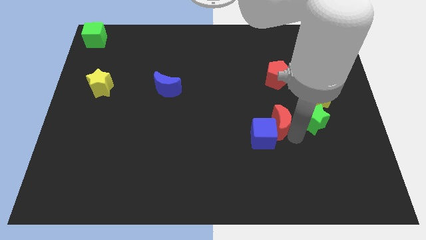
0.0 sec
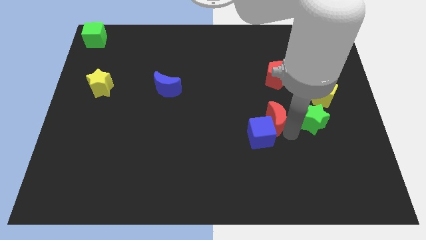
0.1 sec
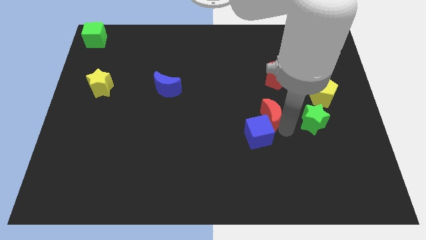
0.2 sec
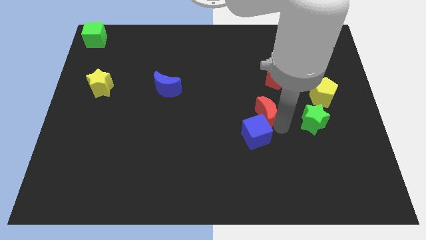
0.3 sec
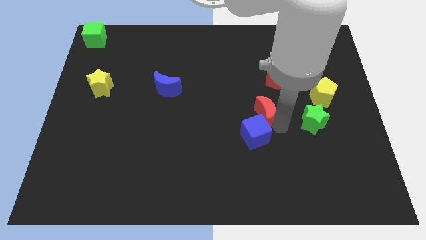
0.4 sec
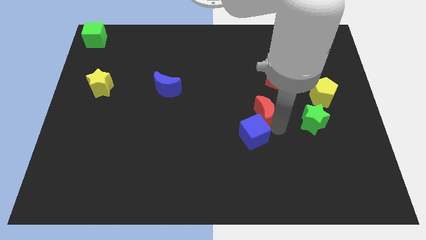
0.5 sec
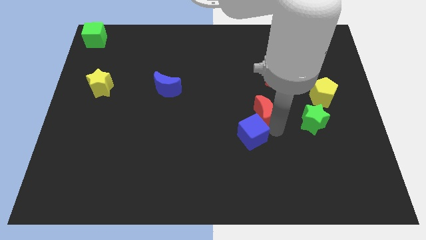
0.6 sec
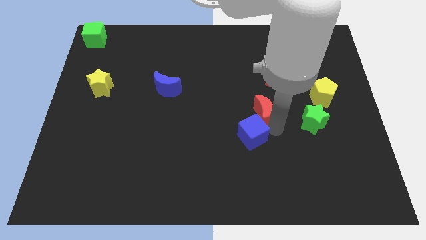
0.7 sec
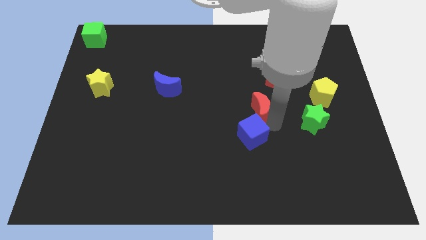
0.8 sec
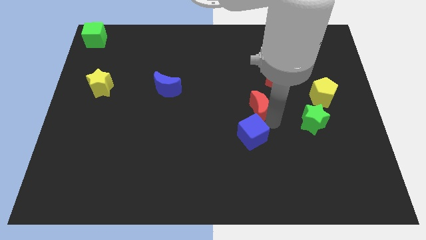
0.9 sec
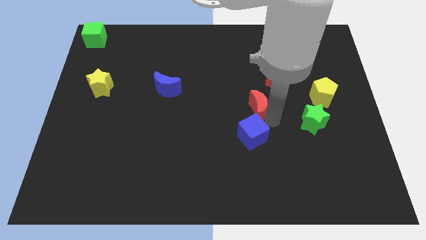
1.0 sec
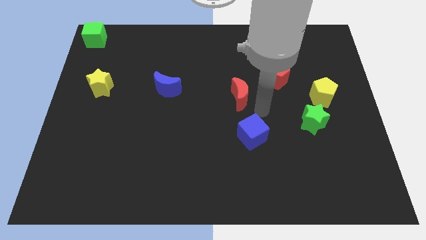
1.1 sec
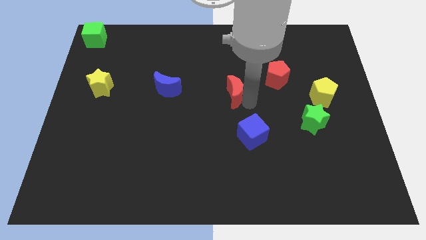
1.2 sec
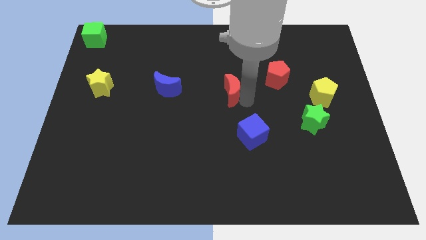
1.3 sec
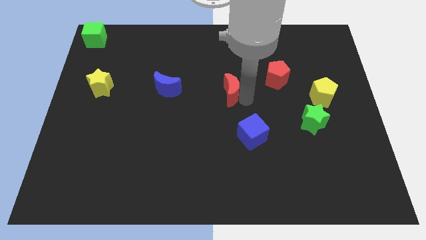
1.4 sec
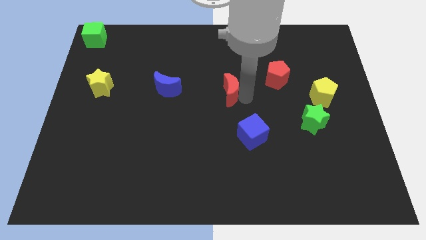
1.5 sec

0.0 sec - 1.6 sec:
move the red crescent away from the blue cube

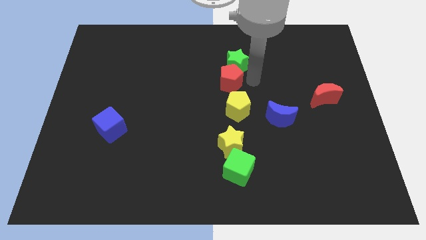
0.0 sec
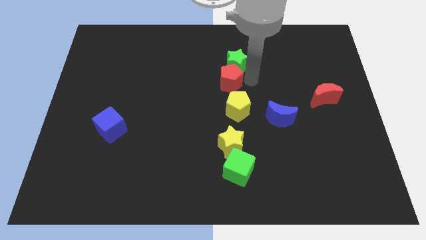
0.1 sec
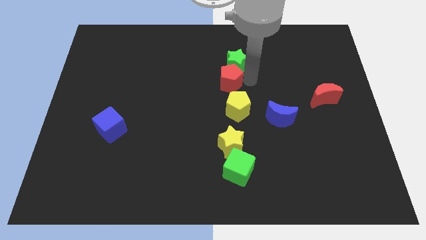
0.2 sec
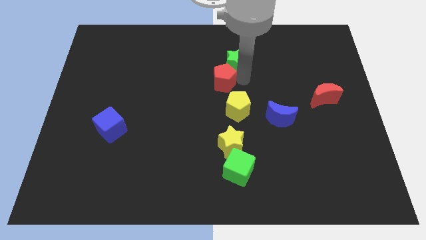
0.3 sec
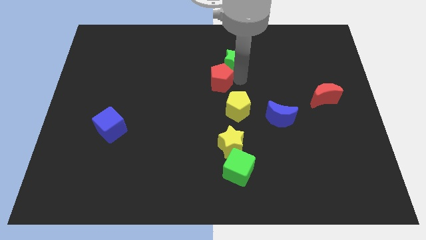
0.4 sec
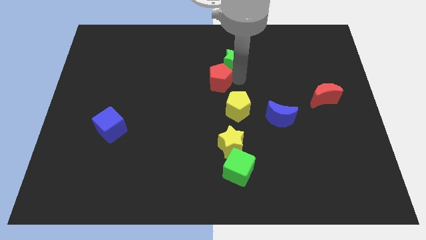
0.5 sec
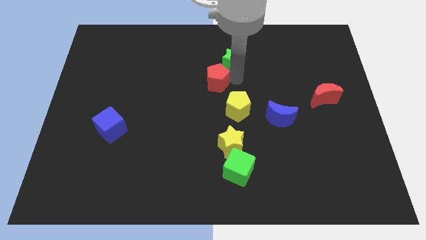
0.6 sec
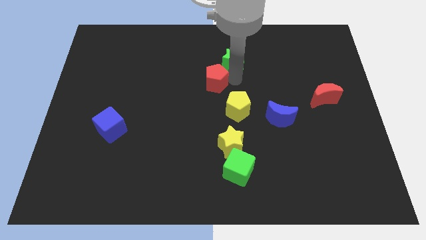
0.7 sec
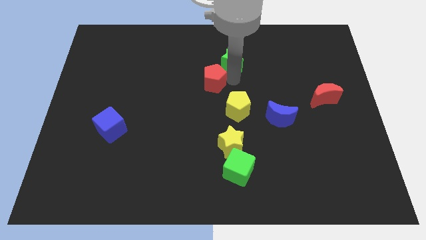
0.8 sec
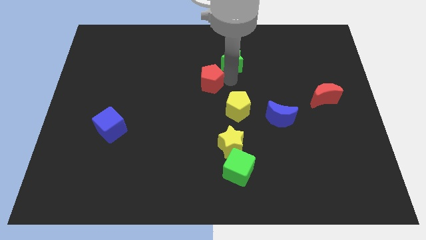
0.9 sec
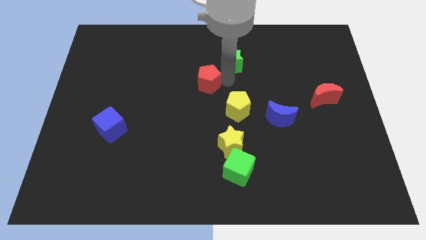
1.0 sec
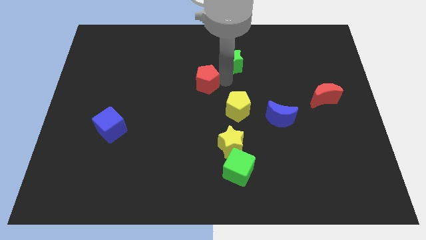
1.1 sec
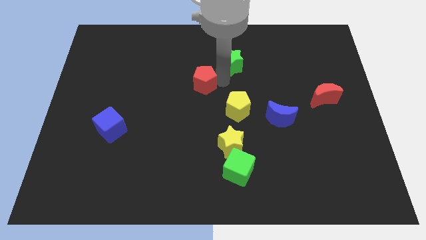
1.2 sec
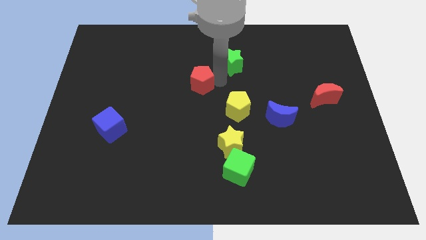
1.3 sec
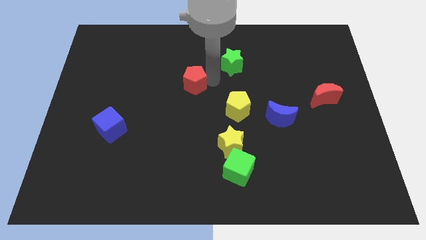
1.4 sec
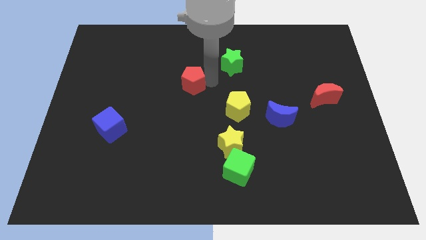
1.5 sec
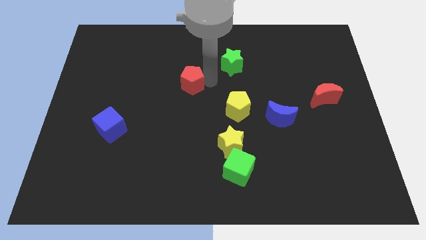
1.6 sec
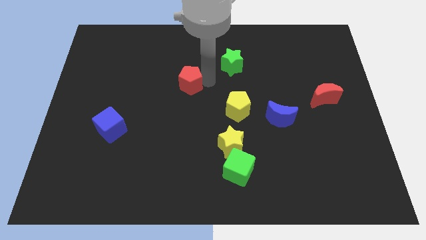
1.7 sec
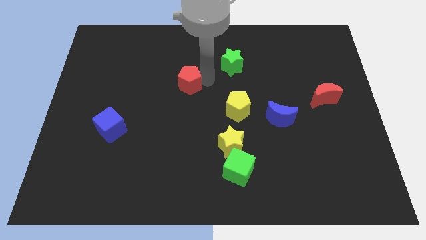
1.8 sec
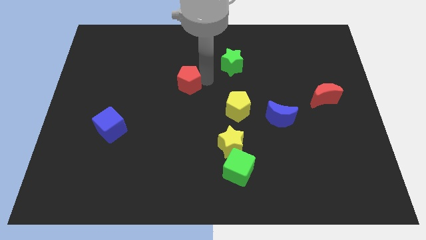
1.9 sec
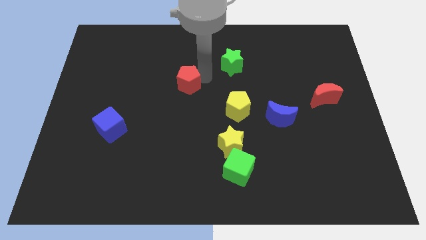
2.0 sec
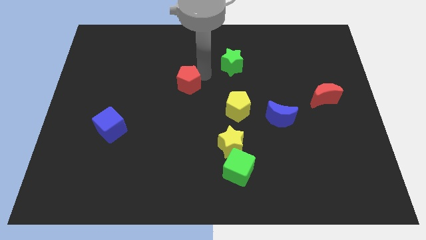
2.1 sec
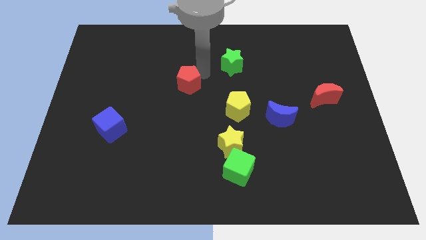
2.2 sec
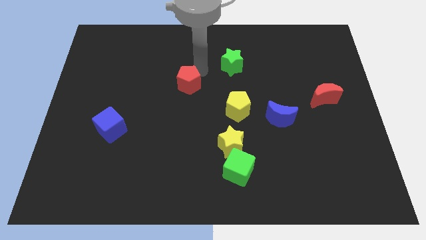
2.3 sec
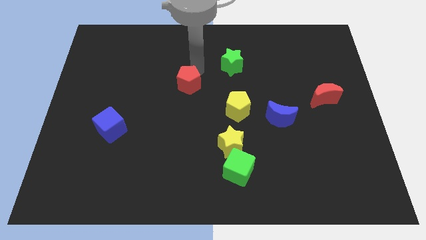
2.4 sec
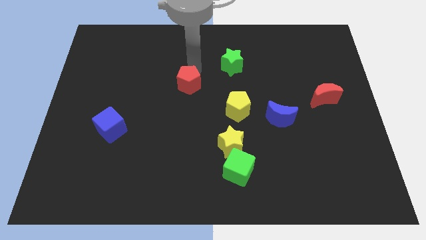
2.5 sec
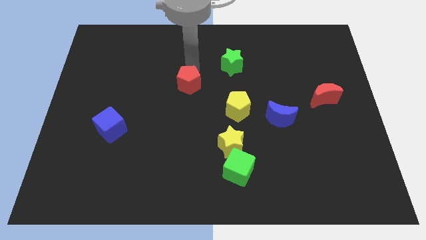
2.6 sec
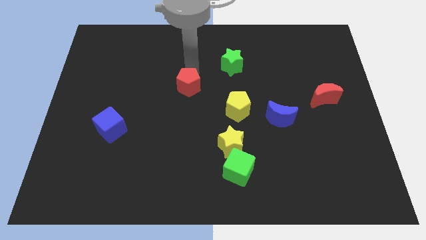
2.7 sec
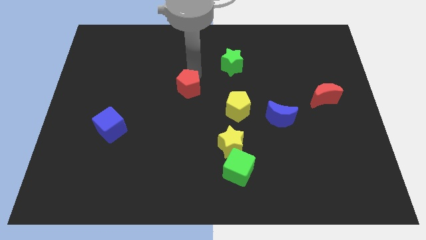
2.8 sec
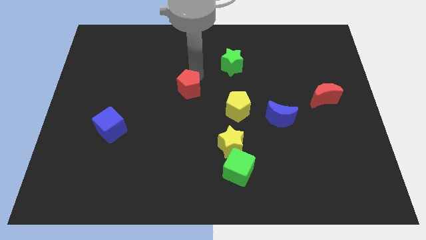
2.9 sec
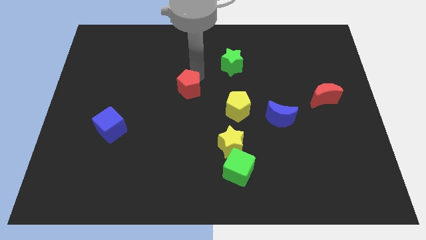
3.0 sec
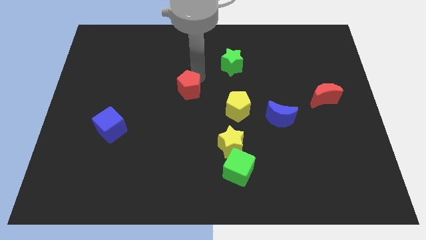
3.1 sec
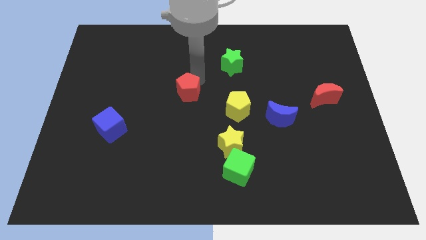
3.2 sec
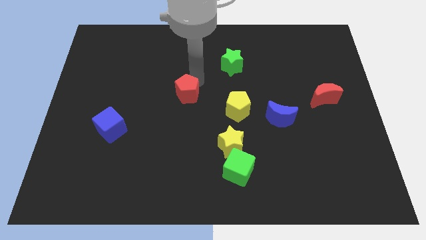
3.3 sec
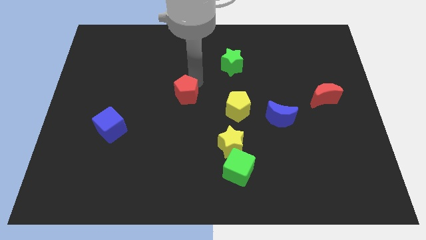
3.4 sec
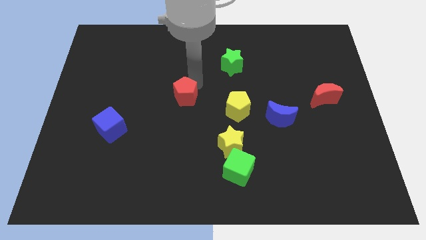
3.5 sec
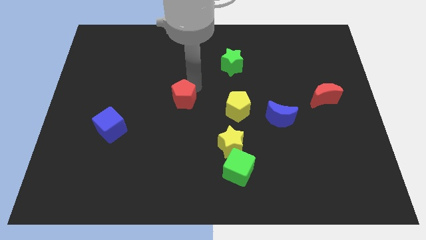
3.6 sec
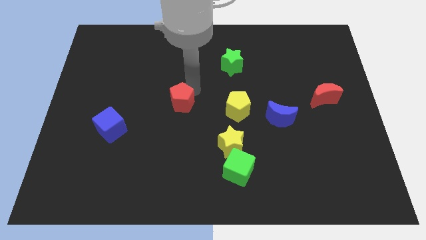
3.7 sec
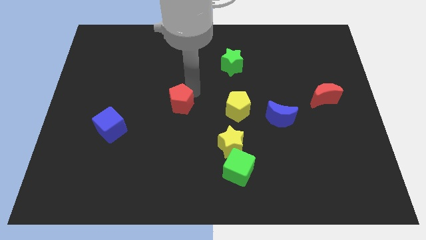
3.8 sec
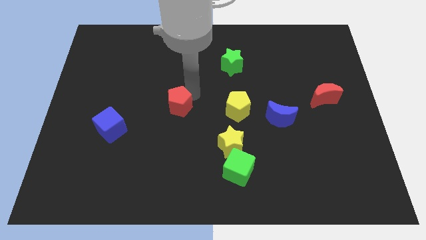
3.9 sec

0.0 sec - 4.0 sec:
separate the red pentagon from the green star

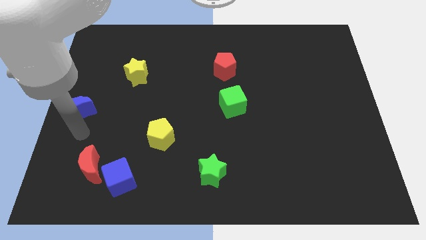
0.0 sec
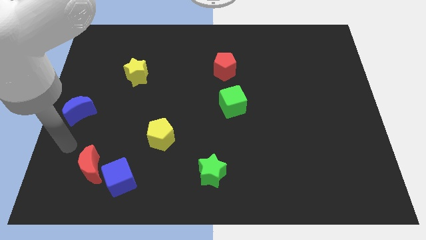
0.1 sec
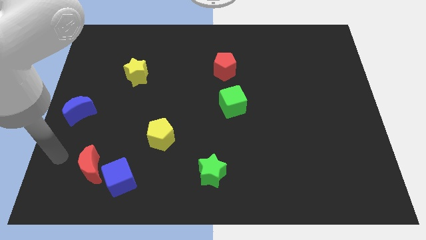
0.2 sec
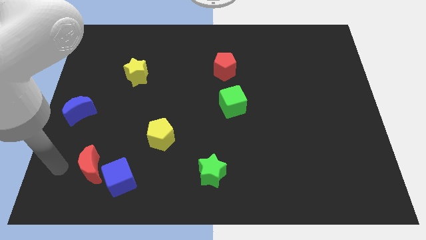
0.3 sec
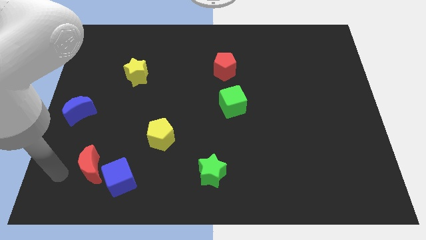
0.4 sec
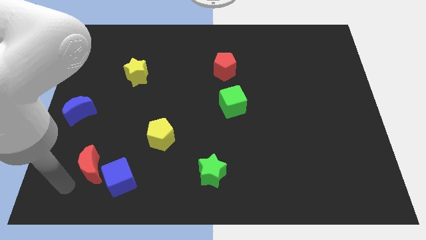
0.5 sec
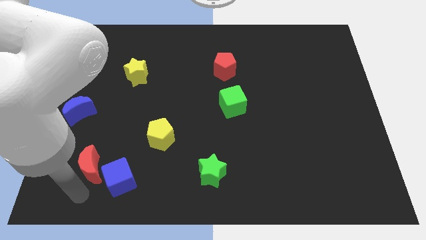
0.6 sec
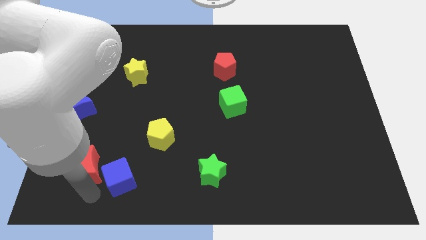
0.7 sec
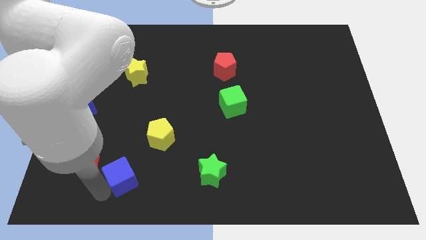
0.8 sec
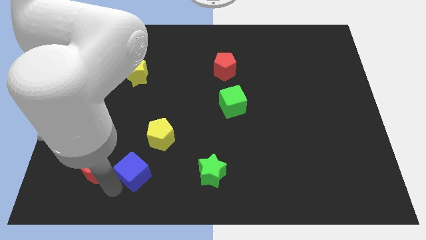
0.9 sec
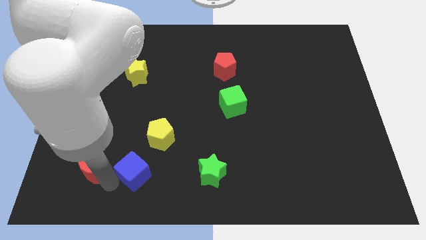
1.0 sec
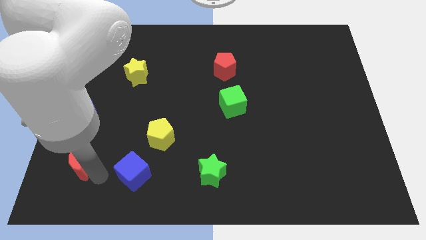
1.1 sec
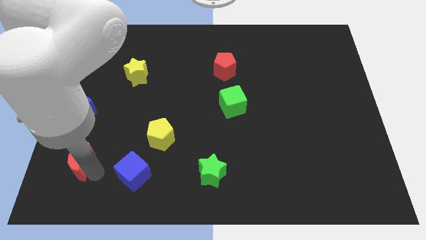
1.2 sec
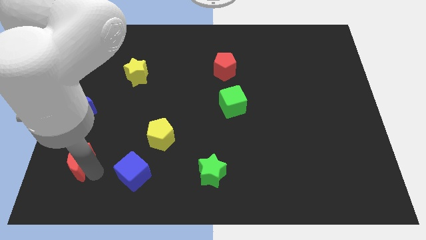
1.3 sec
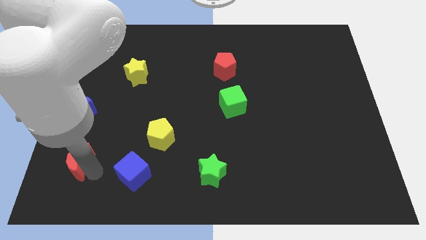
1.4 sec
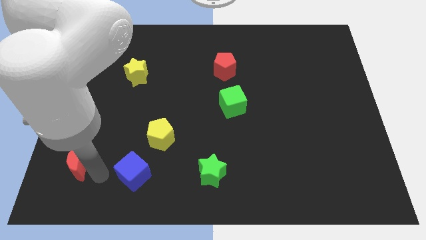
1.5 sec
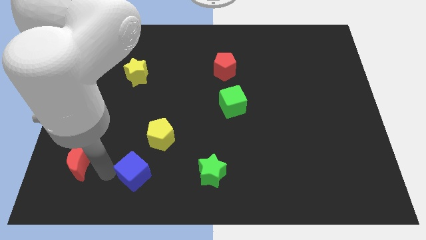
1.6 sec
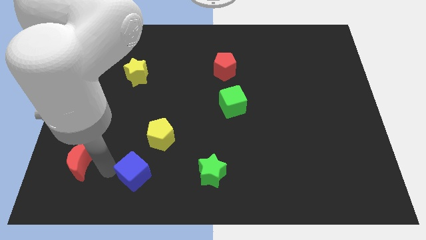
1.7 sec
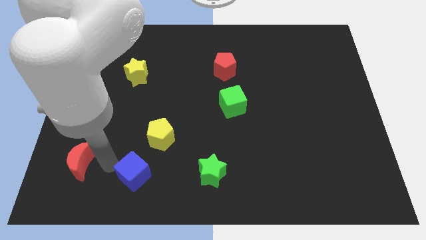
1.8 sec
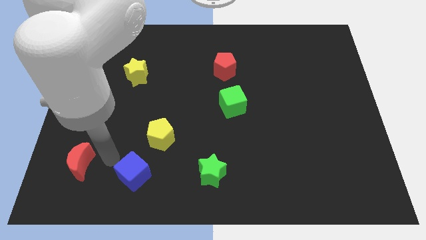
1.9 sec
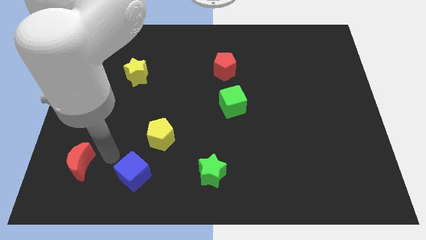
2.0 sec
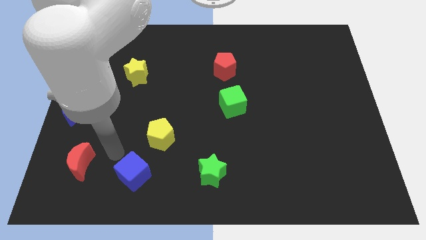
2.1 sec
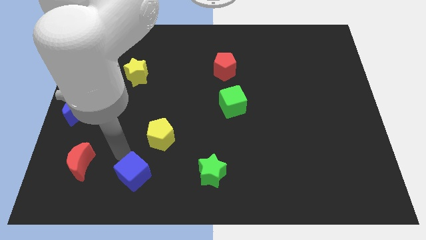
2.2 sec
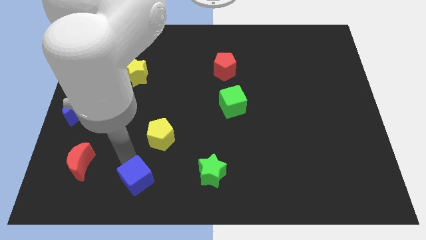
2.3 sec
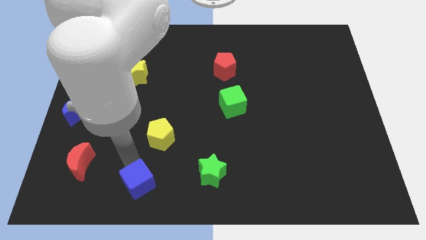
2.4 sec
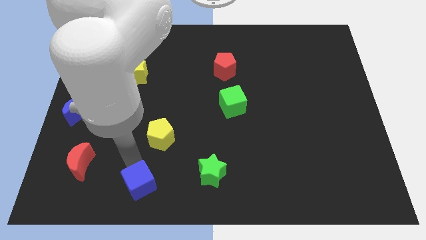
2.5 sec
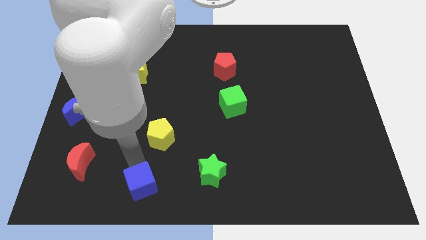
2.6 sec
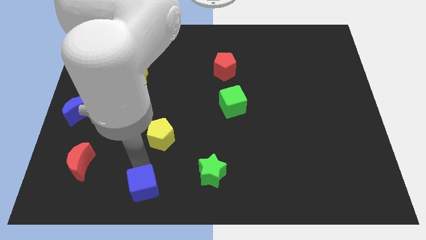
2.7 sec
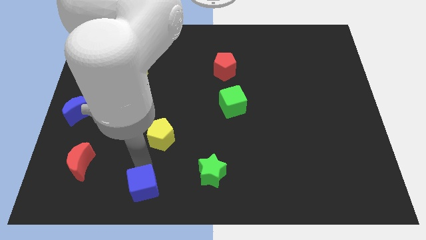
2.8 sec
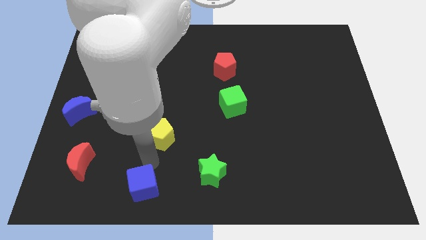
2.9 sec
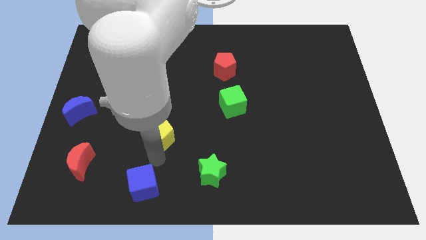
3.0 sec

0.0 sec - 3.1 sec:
separate the red crescent and the blue cube

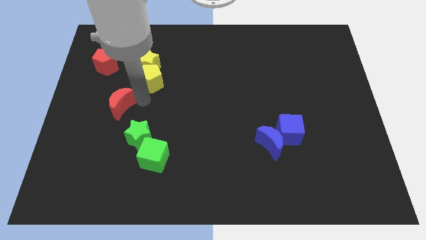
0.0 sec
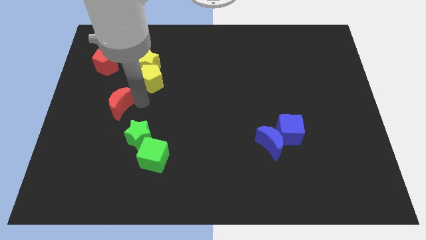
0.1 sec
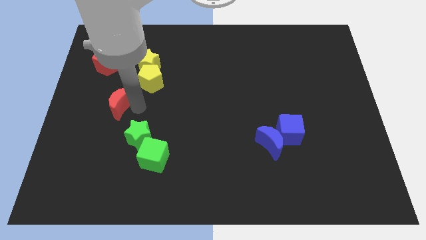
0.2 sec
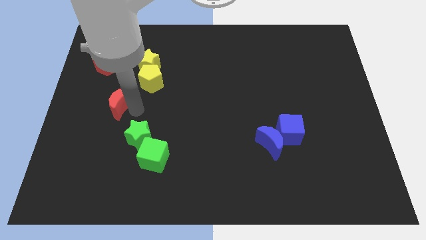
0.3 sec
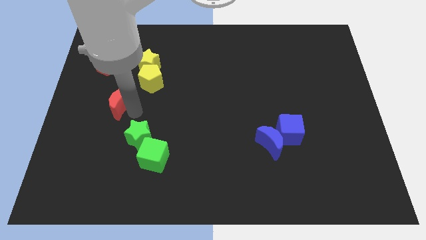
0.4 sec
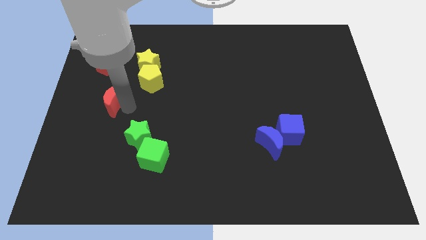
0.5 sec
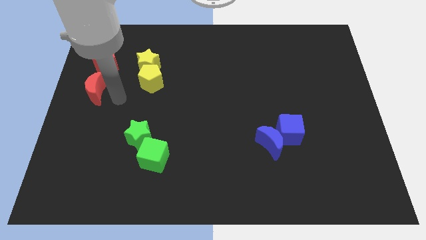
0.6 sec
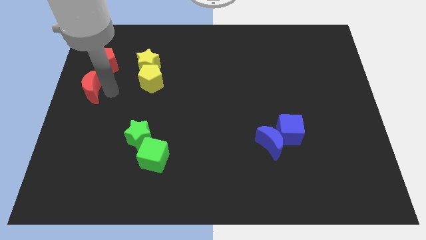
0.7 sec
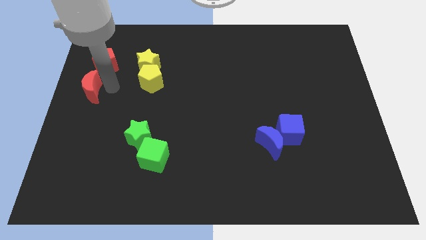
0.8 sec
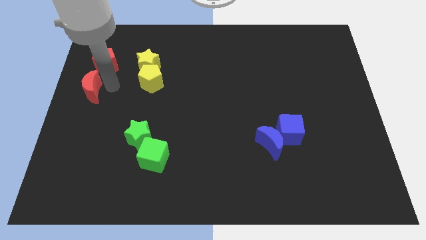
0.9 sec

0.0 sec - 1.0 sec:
place the red red crescent below the red pentagon
